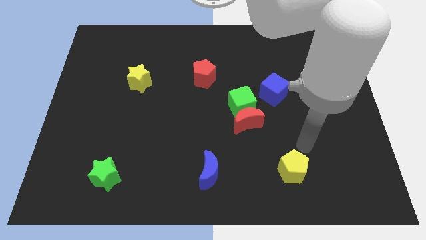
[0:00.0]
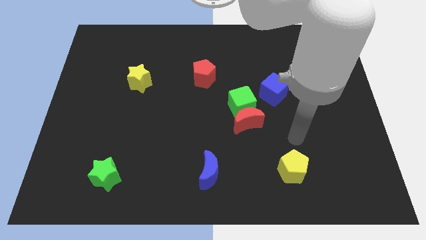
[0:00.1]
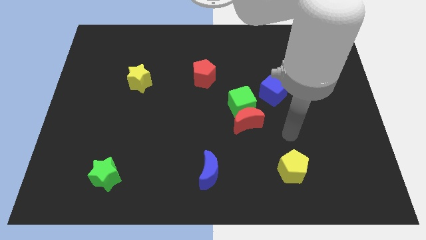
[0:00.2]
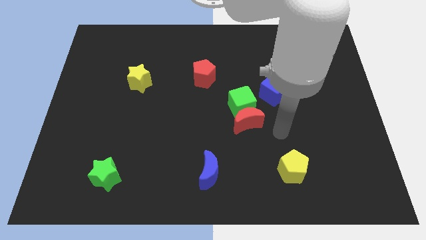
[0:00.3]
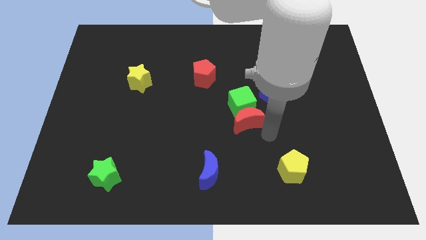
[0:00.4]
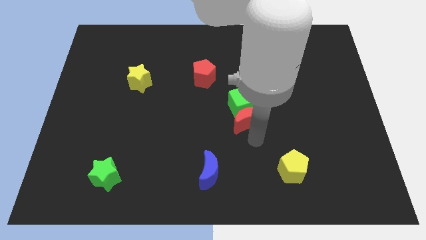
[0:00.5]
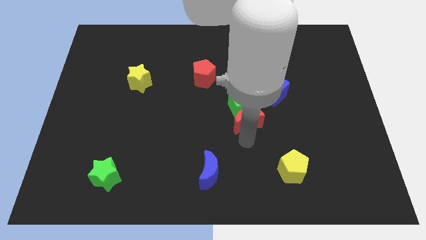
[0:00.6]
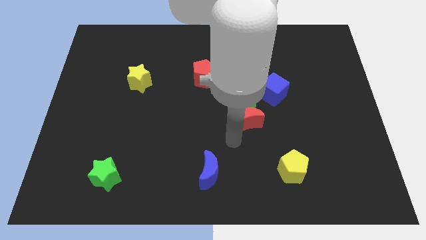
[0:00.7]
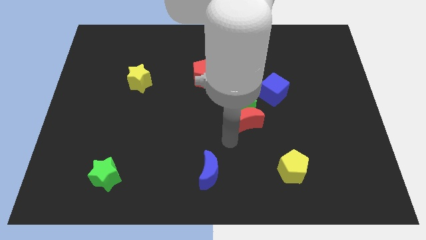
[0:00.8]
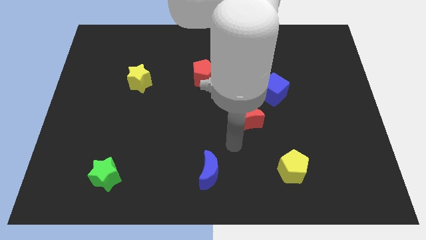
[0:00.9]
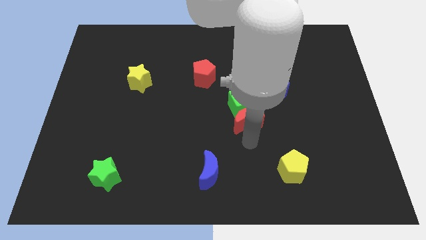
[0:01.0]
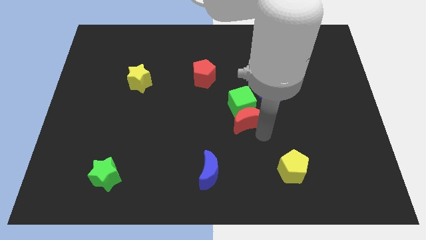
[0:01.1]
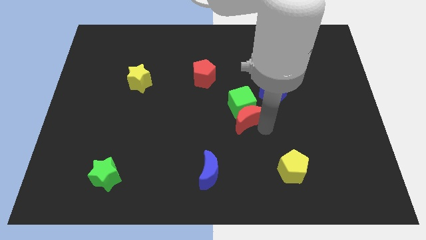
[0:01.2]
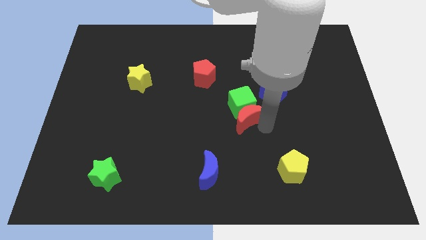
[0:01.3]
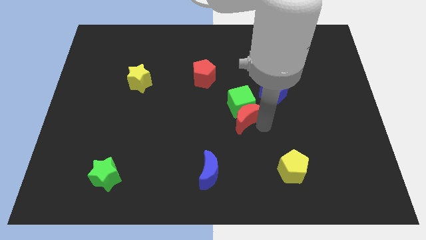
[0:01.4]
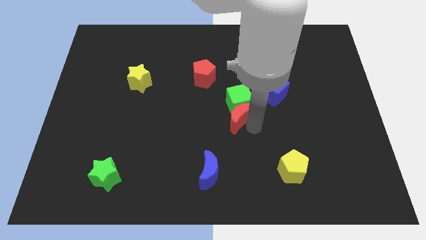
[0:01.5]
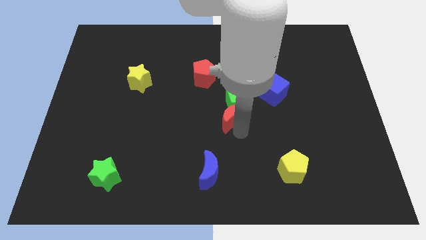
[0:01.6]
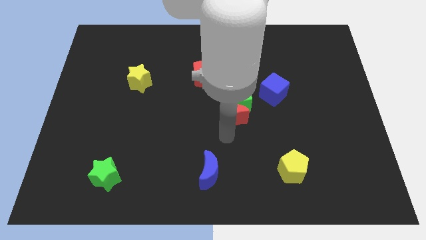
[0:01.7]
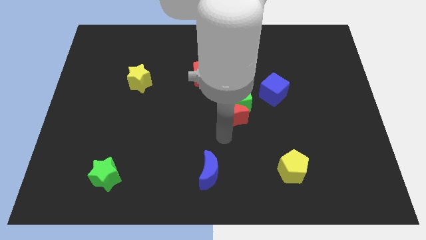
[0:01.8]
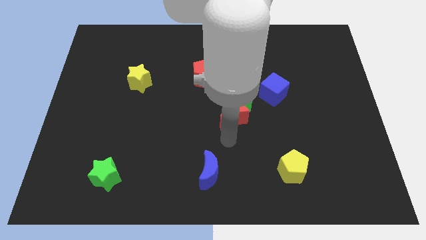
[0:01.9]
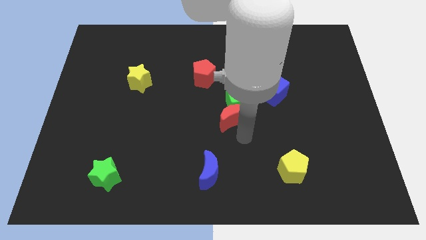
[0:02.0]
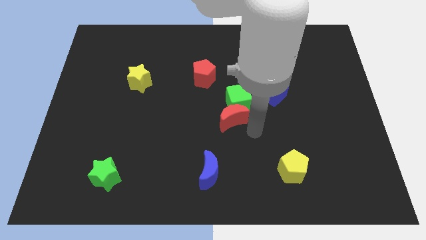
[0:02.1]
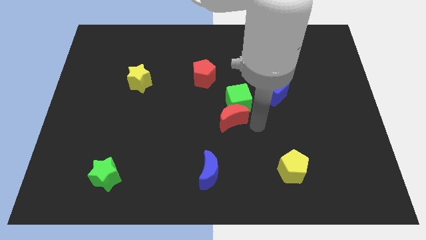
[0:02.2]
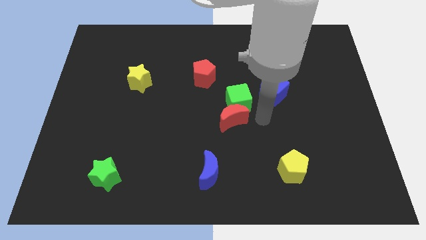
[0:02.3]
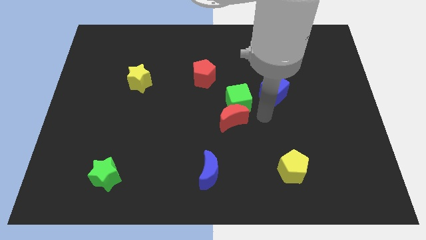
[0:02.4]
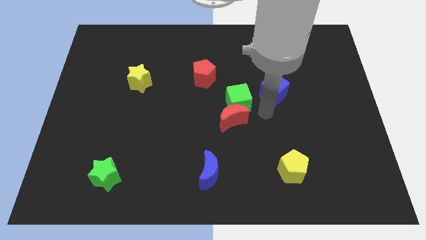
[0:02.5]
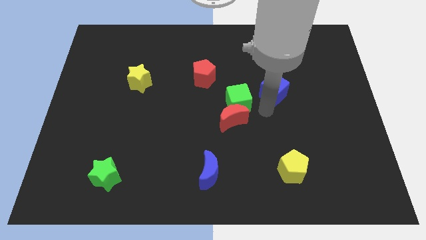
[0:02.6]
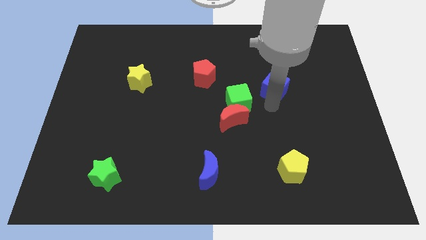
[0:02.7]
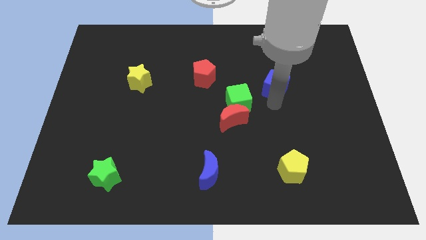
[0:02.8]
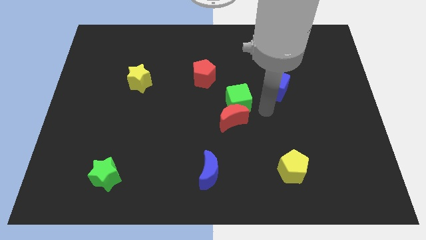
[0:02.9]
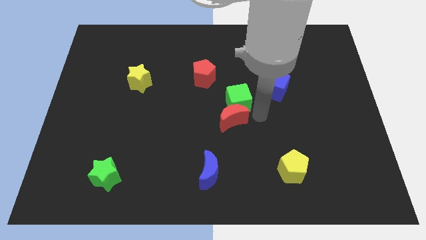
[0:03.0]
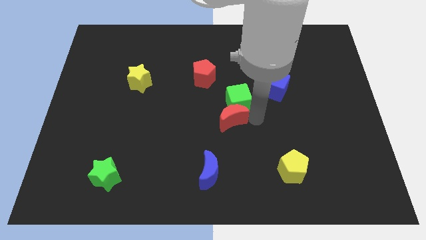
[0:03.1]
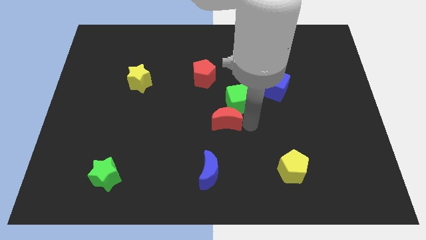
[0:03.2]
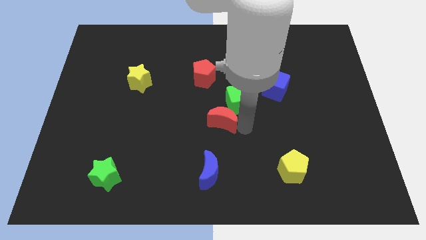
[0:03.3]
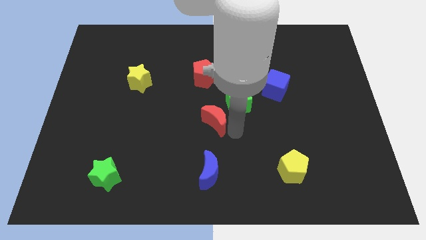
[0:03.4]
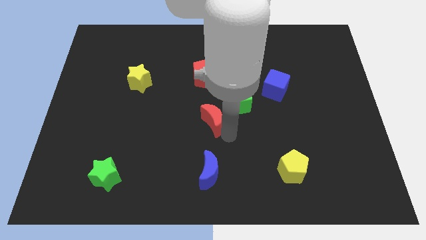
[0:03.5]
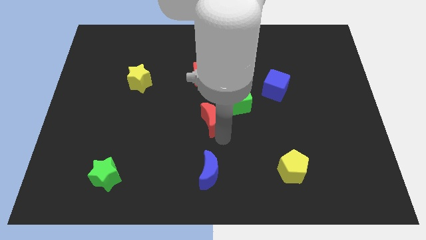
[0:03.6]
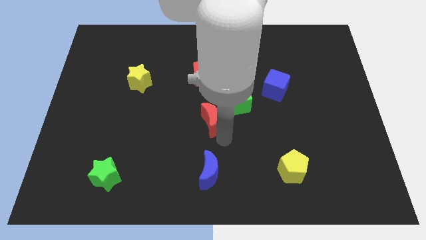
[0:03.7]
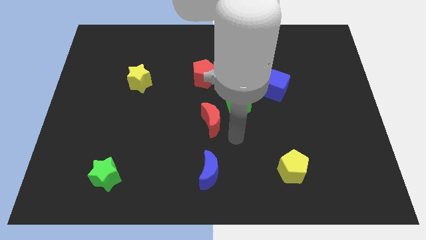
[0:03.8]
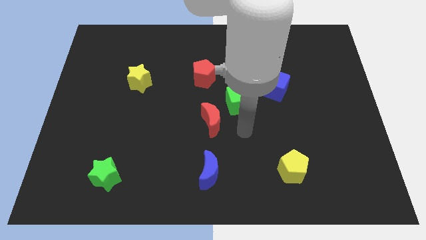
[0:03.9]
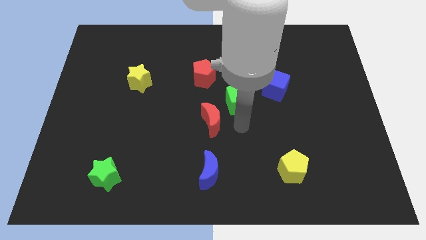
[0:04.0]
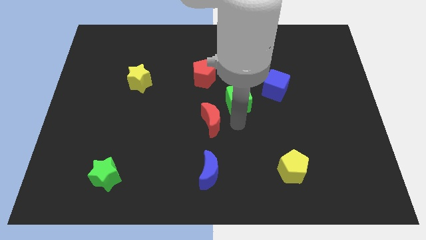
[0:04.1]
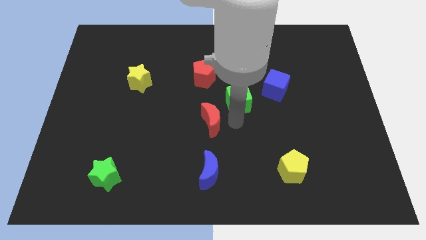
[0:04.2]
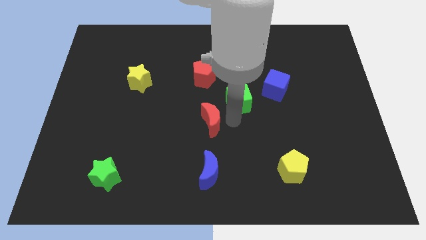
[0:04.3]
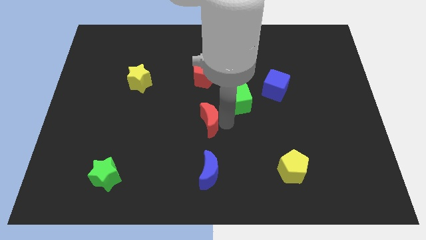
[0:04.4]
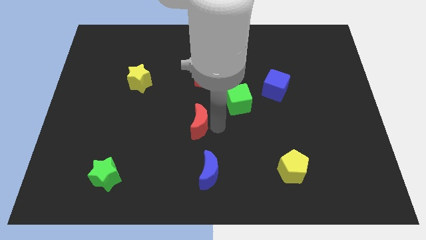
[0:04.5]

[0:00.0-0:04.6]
place the red moon in between the red pentagon and blue moon

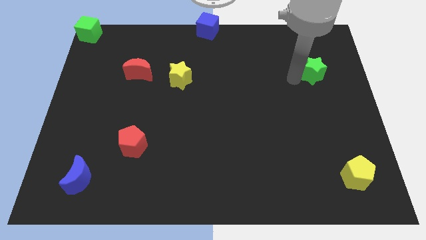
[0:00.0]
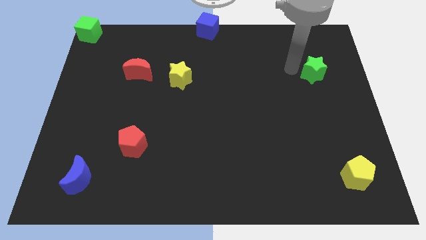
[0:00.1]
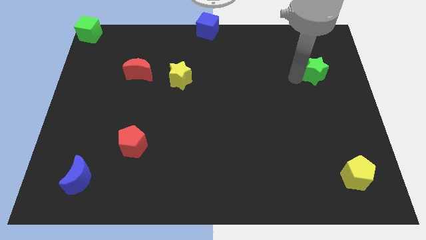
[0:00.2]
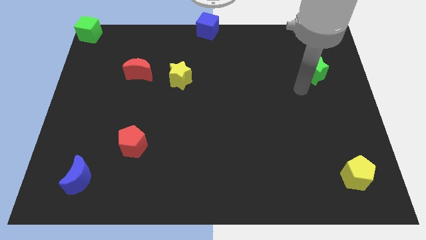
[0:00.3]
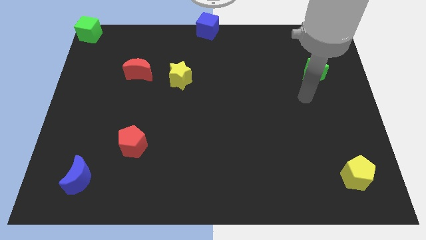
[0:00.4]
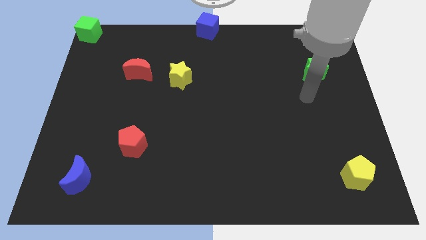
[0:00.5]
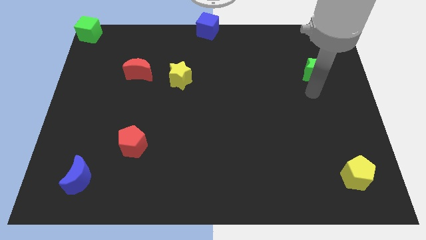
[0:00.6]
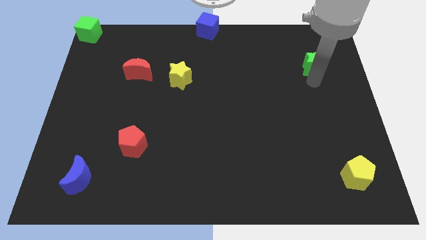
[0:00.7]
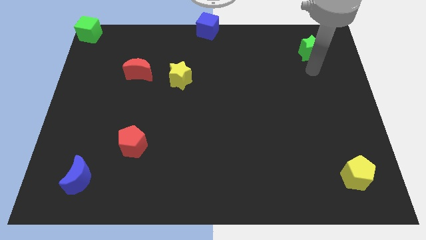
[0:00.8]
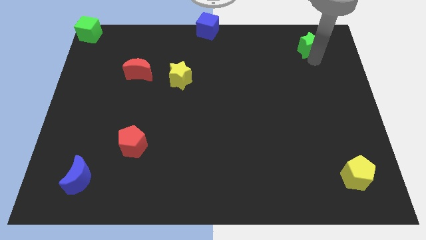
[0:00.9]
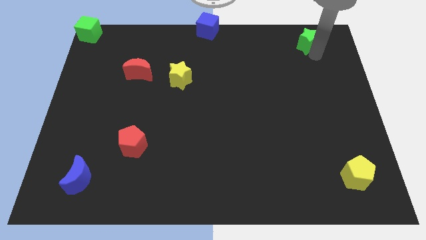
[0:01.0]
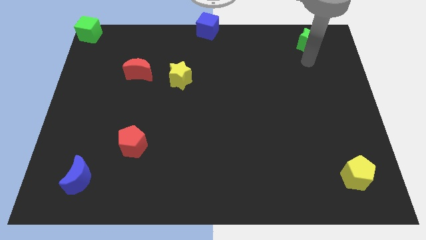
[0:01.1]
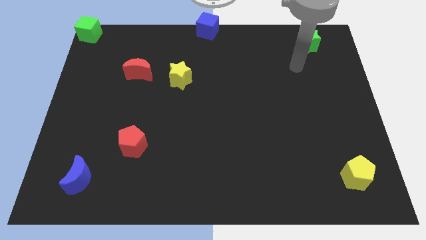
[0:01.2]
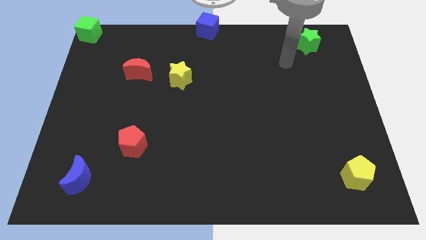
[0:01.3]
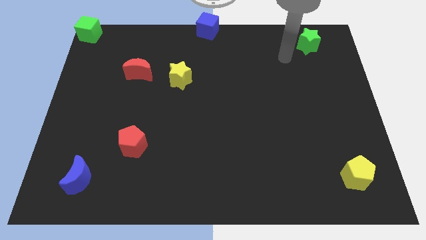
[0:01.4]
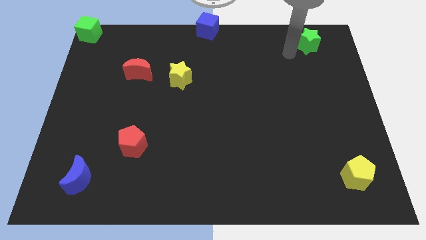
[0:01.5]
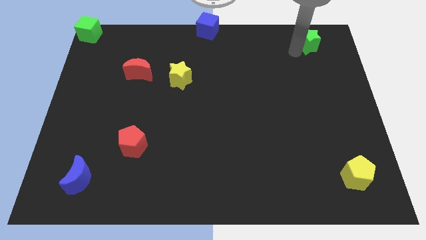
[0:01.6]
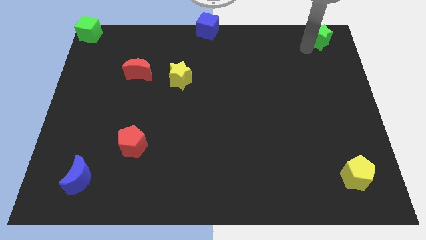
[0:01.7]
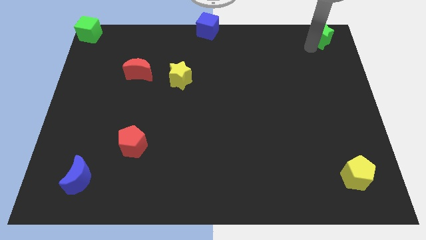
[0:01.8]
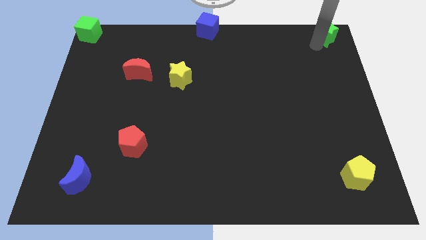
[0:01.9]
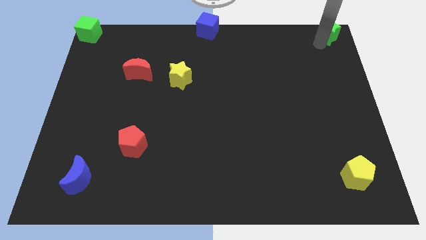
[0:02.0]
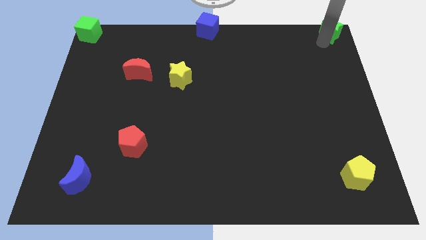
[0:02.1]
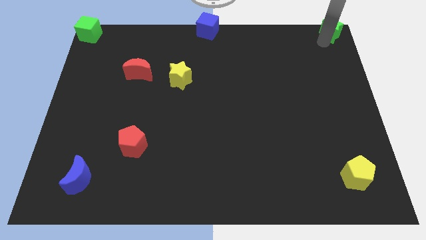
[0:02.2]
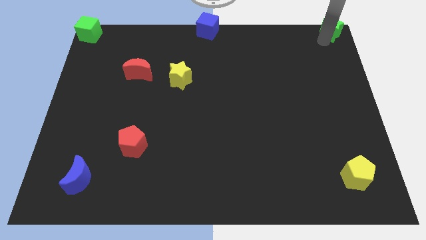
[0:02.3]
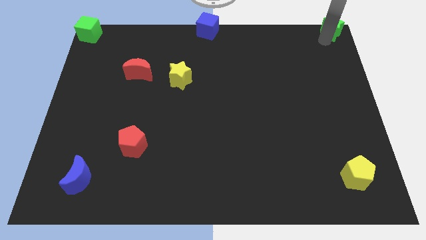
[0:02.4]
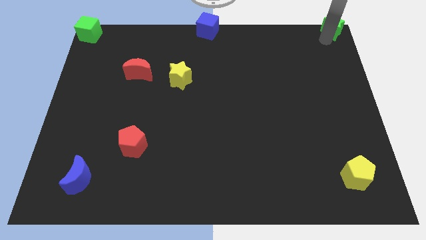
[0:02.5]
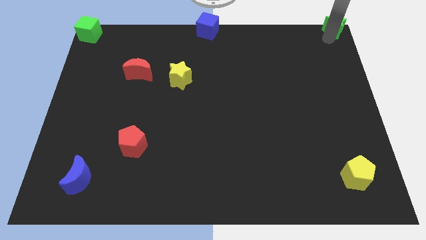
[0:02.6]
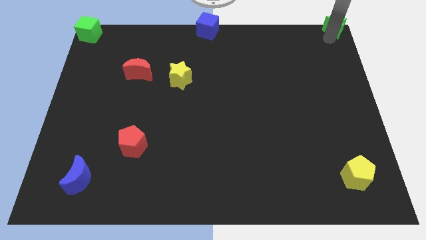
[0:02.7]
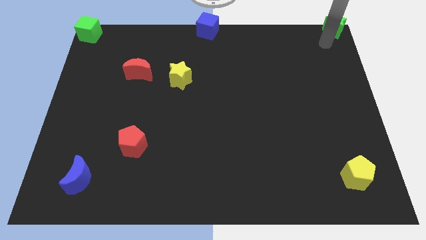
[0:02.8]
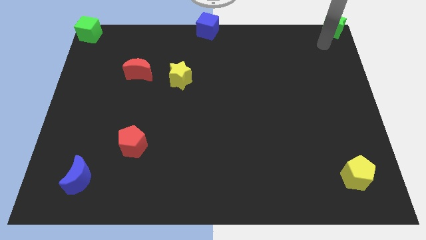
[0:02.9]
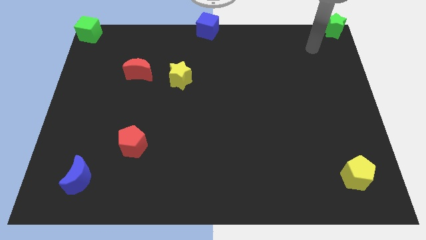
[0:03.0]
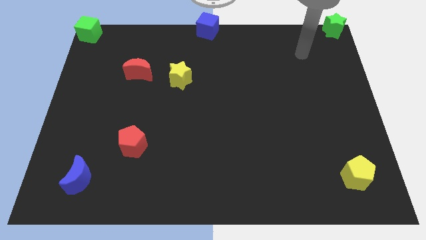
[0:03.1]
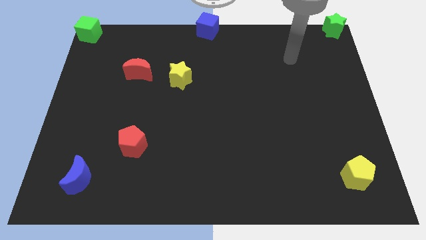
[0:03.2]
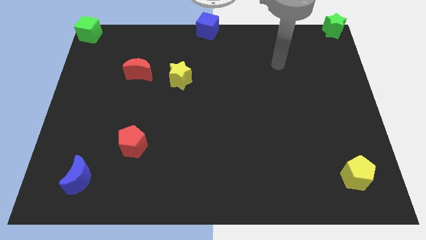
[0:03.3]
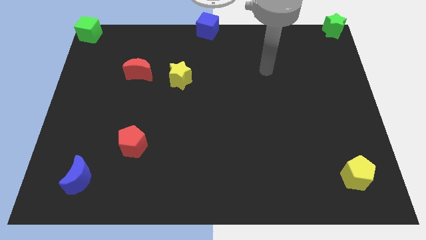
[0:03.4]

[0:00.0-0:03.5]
push the green star towards right top corner of the board

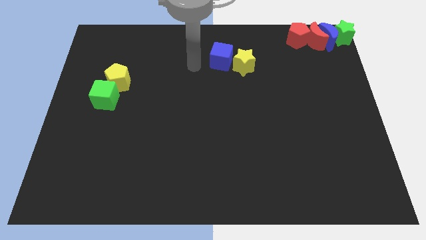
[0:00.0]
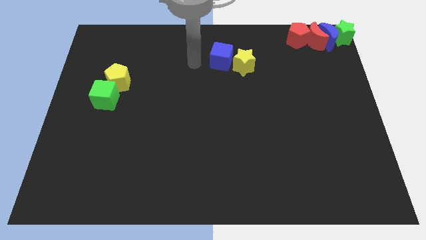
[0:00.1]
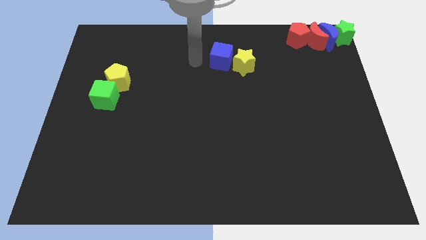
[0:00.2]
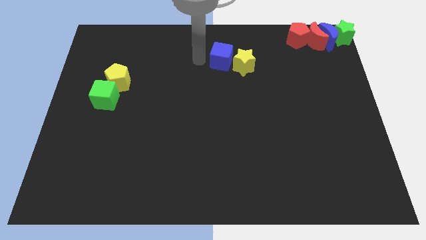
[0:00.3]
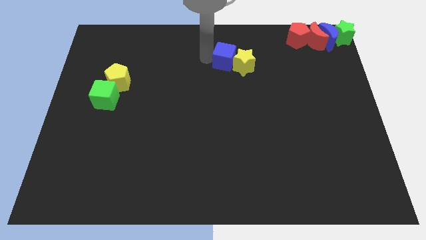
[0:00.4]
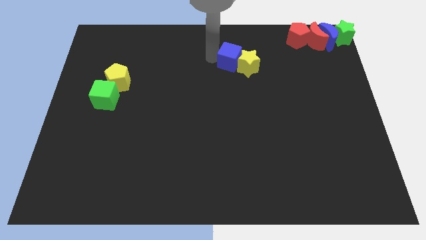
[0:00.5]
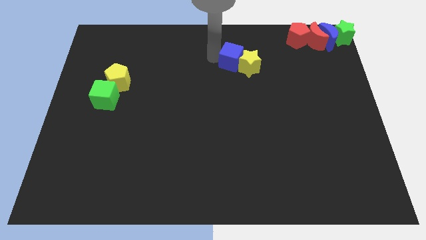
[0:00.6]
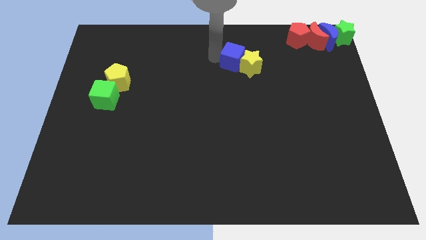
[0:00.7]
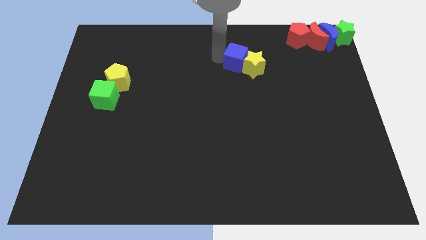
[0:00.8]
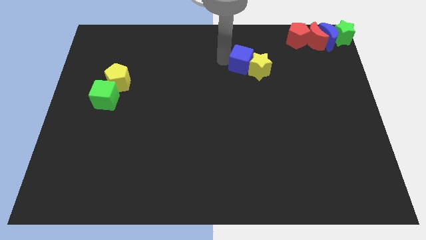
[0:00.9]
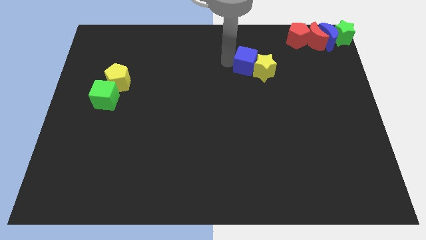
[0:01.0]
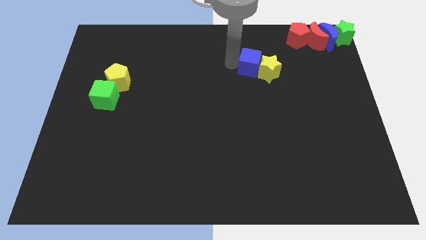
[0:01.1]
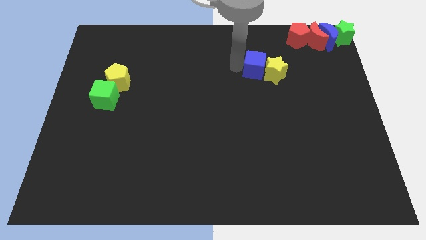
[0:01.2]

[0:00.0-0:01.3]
push the blue cube into the yellow star
